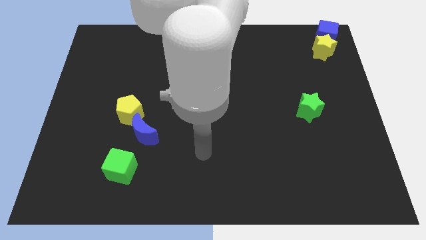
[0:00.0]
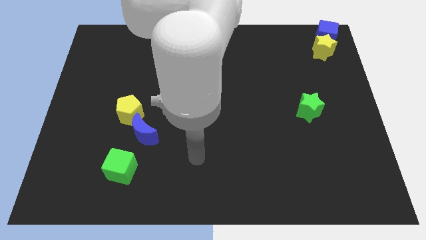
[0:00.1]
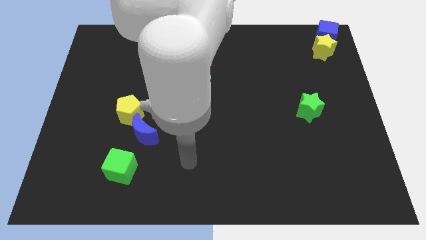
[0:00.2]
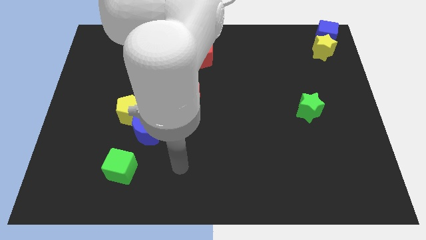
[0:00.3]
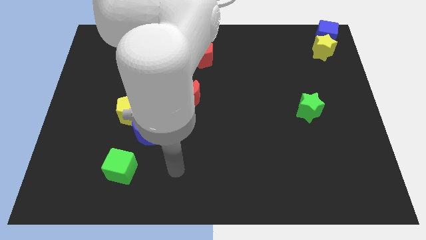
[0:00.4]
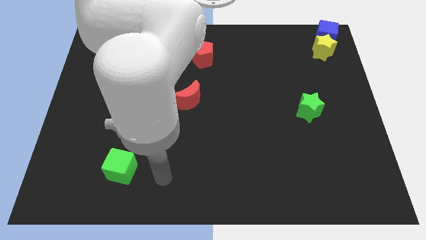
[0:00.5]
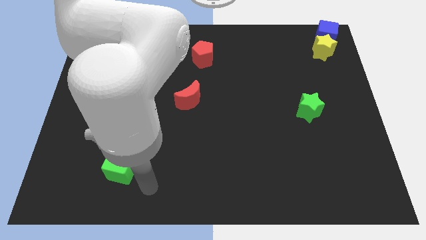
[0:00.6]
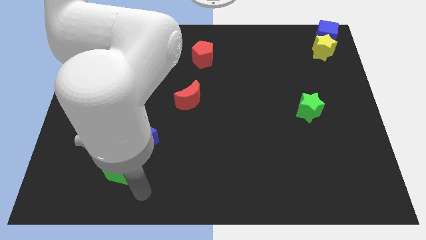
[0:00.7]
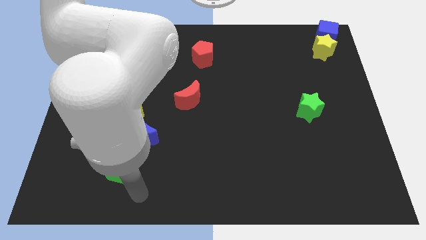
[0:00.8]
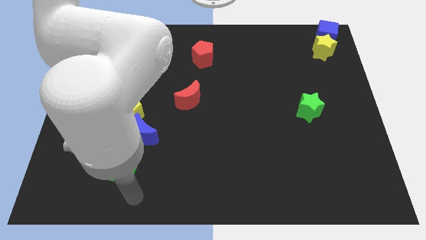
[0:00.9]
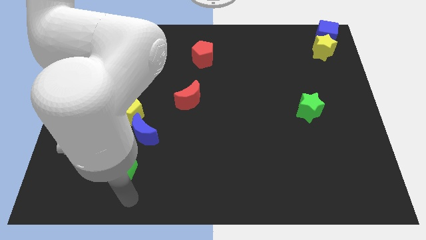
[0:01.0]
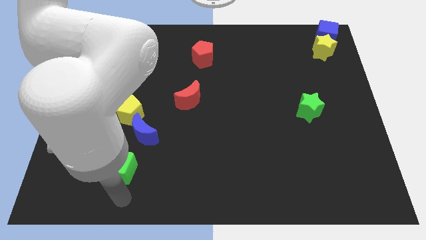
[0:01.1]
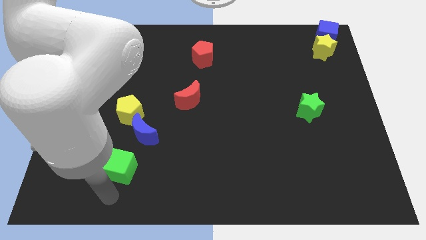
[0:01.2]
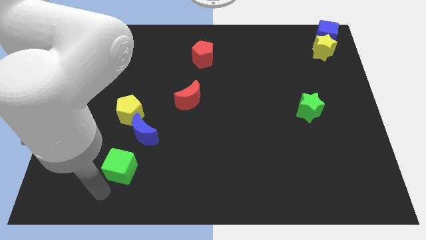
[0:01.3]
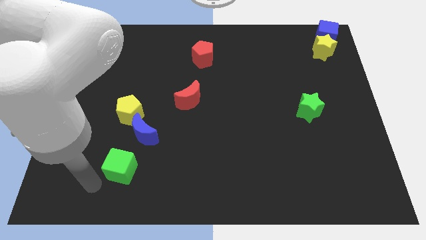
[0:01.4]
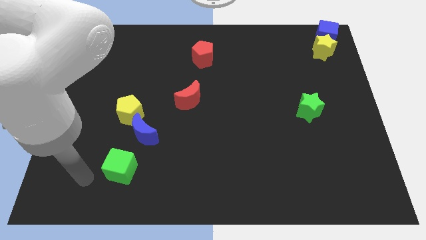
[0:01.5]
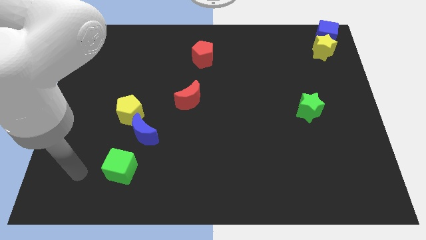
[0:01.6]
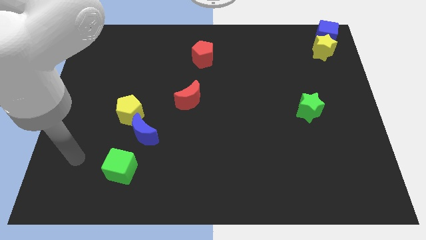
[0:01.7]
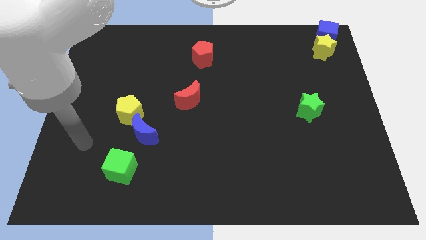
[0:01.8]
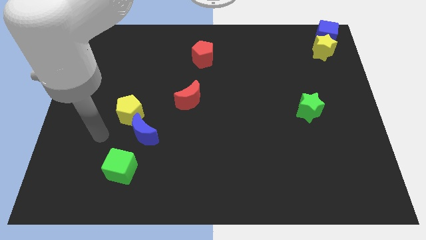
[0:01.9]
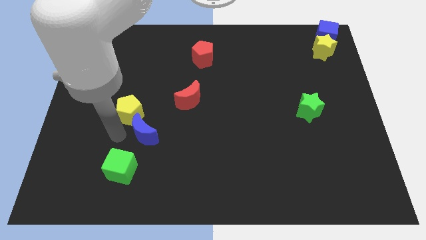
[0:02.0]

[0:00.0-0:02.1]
move your arm towards the left side of the blue crescent

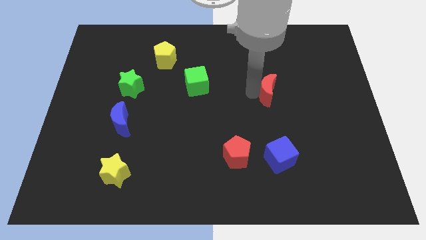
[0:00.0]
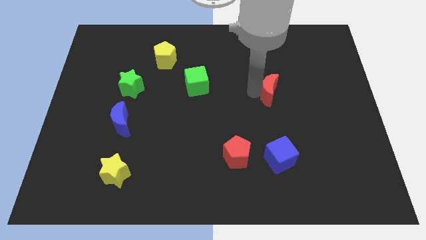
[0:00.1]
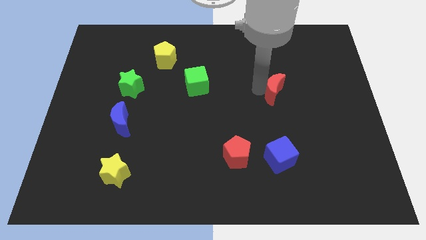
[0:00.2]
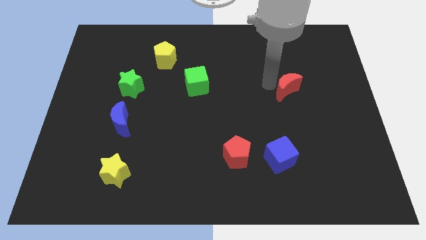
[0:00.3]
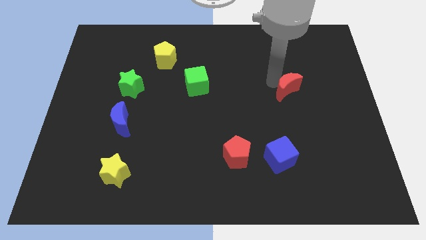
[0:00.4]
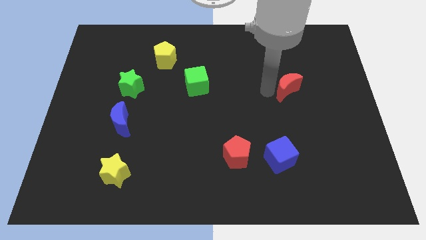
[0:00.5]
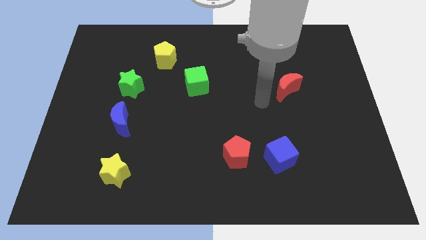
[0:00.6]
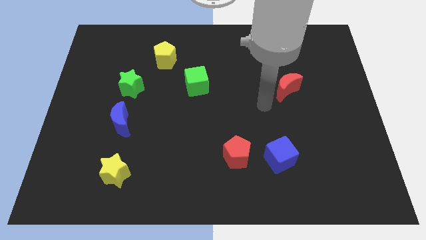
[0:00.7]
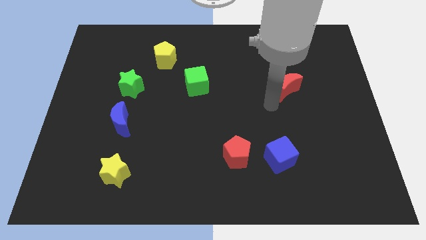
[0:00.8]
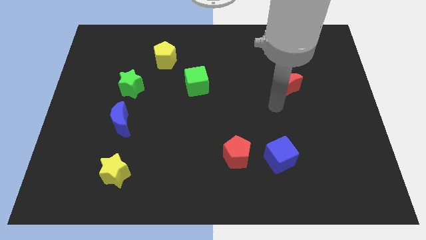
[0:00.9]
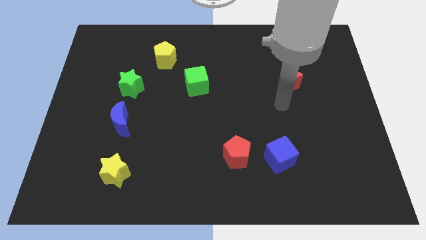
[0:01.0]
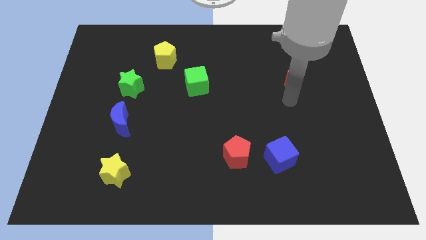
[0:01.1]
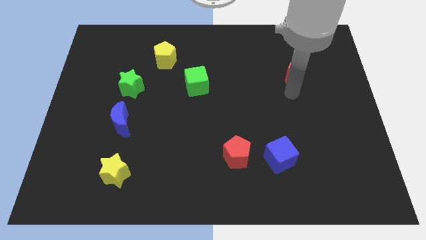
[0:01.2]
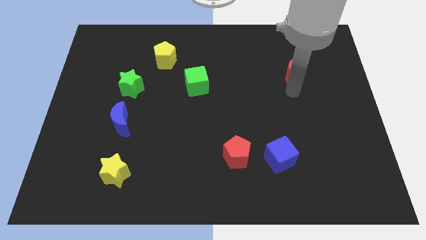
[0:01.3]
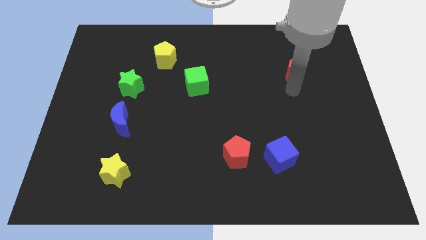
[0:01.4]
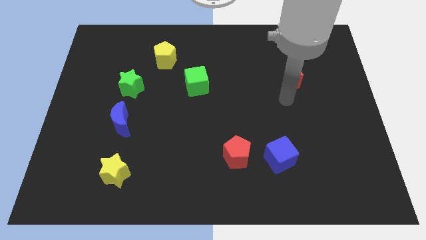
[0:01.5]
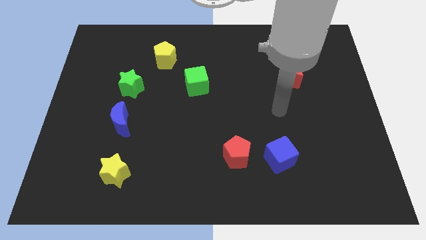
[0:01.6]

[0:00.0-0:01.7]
push red moon towards right side of the board

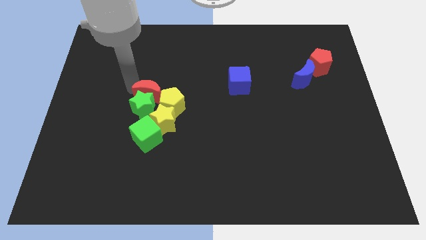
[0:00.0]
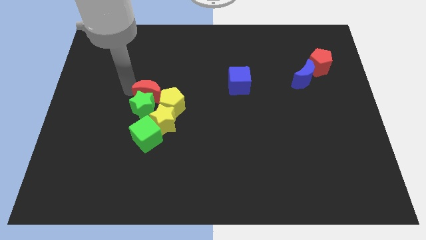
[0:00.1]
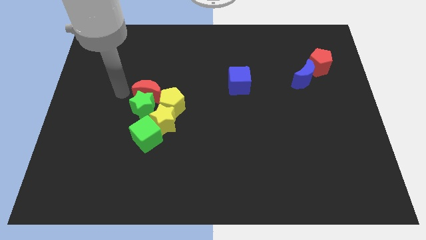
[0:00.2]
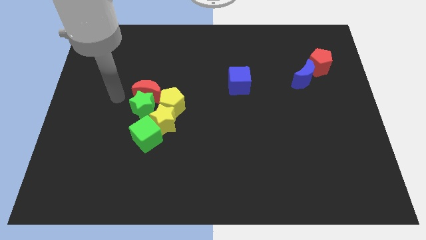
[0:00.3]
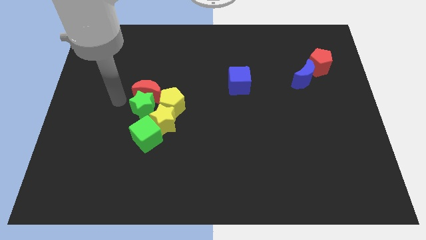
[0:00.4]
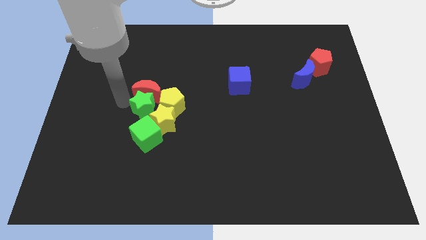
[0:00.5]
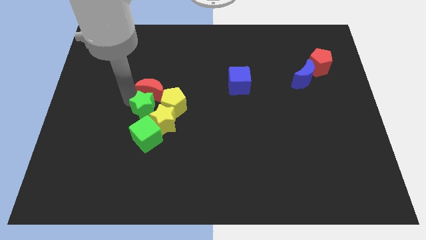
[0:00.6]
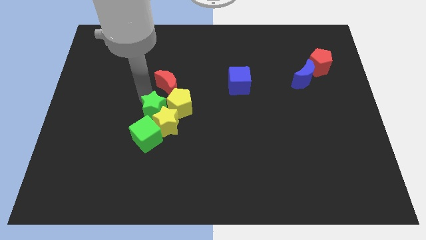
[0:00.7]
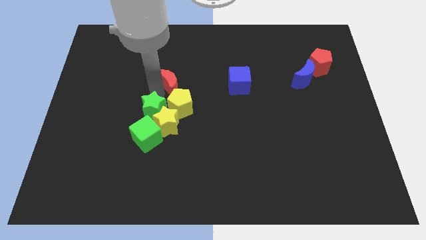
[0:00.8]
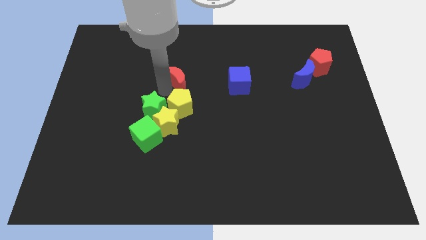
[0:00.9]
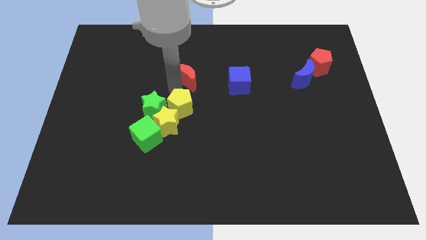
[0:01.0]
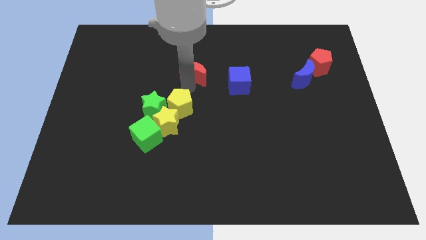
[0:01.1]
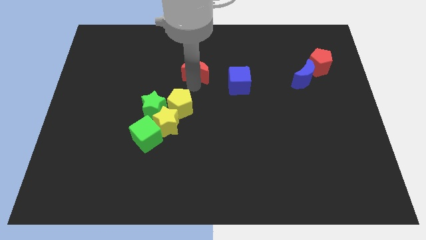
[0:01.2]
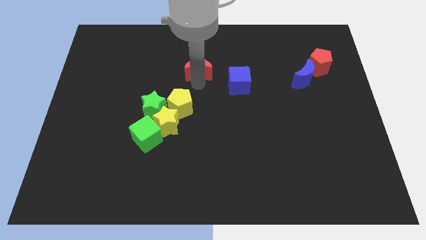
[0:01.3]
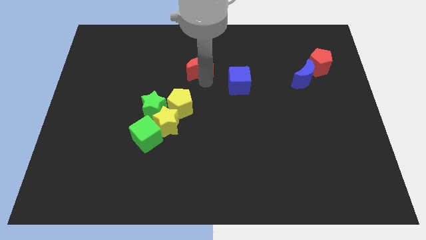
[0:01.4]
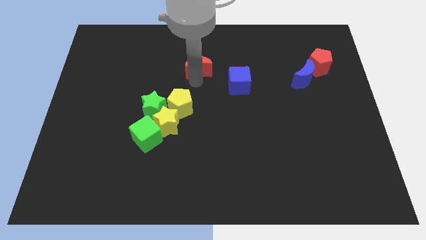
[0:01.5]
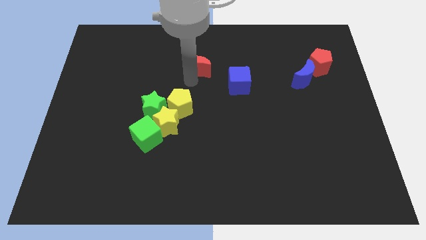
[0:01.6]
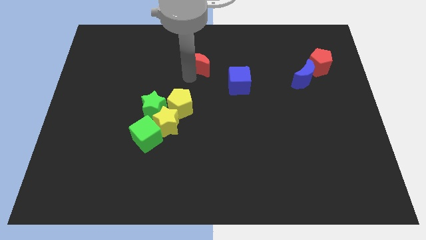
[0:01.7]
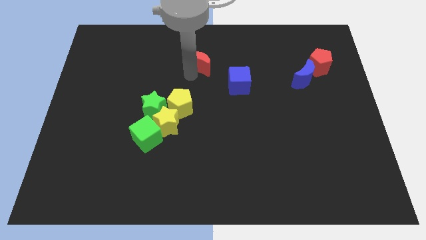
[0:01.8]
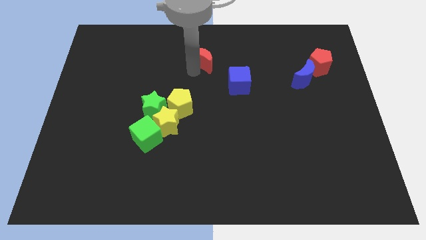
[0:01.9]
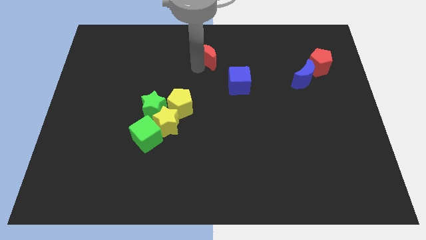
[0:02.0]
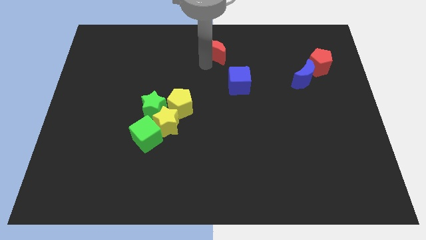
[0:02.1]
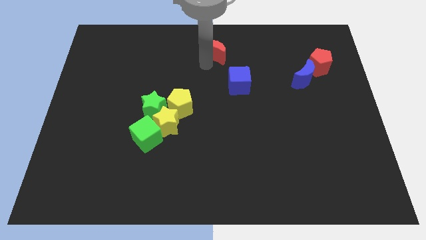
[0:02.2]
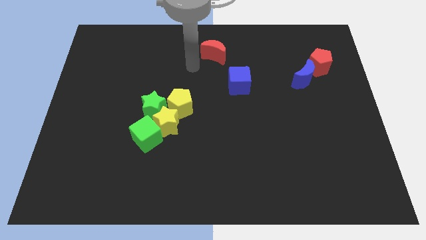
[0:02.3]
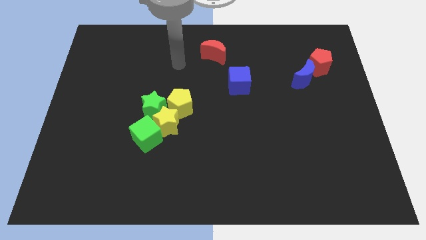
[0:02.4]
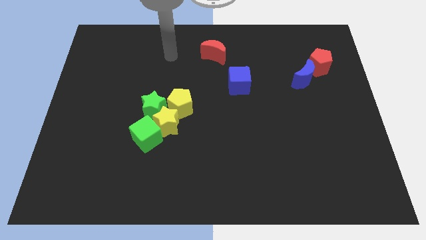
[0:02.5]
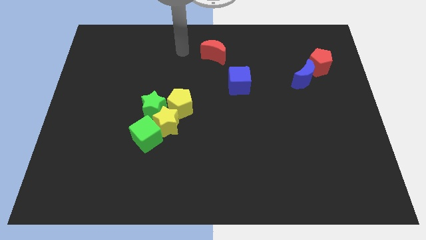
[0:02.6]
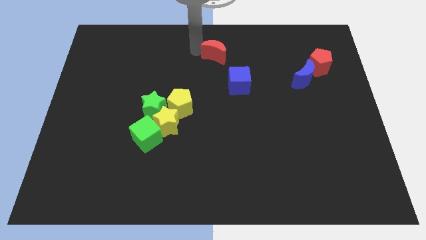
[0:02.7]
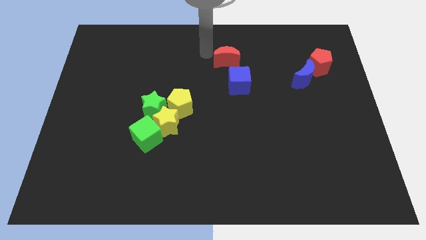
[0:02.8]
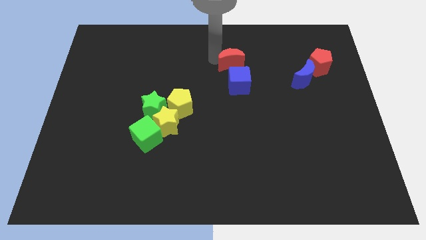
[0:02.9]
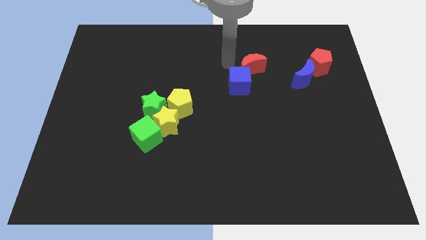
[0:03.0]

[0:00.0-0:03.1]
place red crescent into blue cube

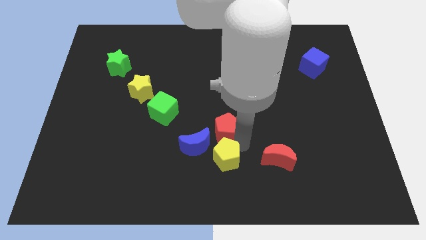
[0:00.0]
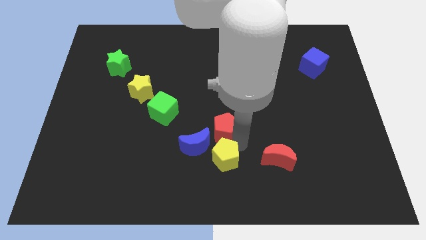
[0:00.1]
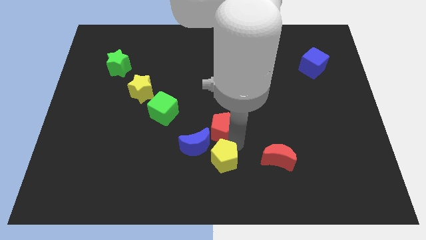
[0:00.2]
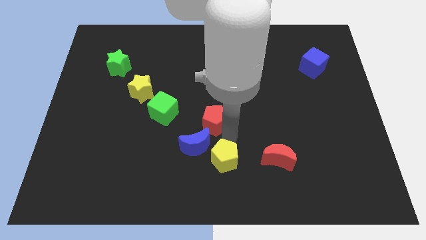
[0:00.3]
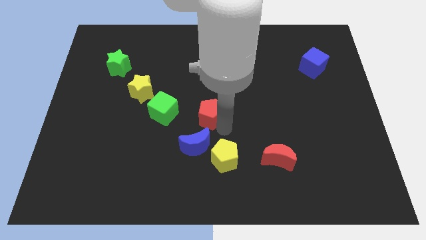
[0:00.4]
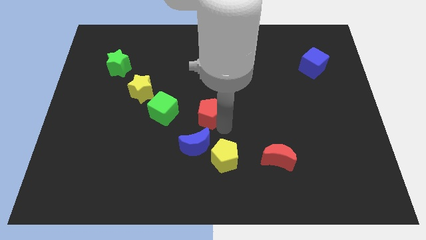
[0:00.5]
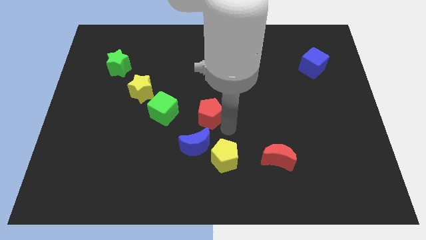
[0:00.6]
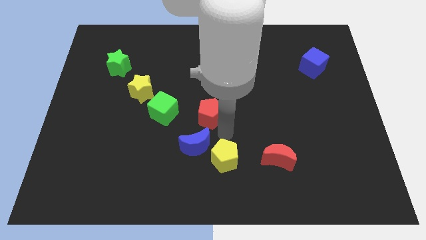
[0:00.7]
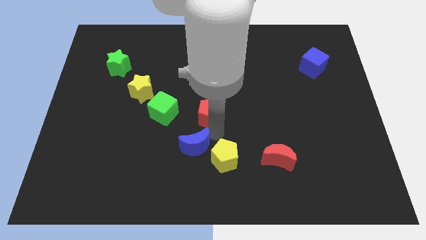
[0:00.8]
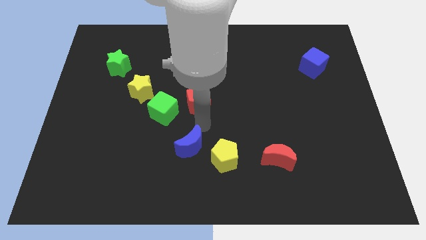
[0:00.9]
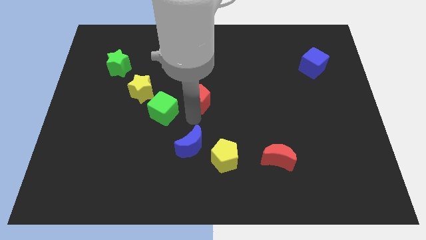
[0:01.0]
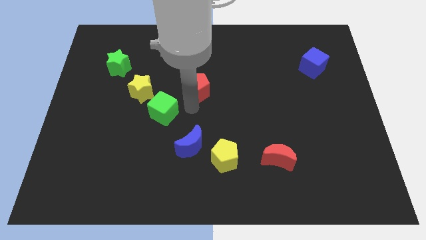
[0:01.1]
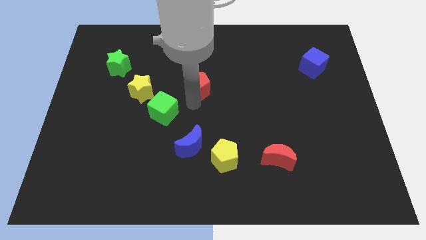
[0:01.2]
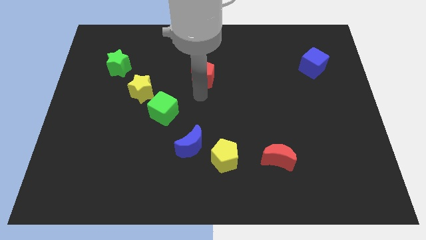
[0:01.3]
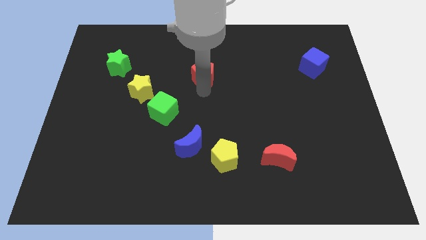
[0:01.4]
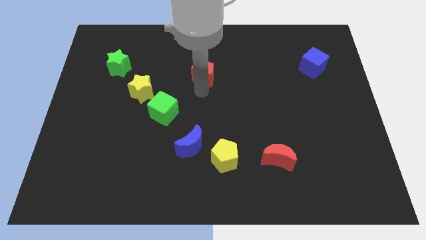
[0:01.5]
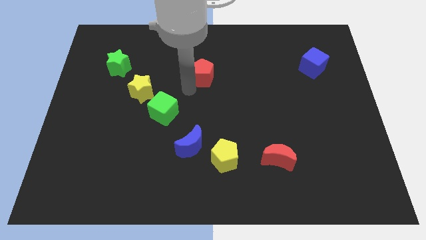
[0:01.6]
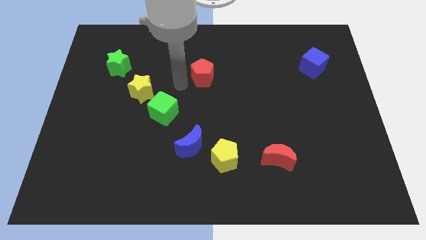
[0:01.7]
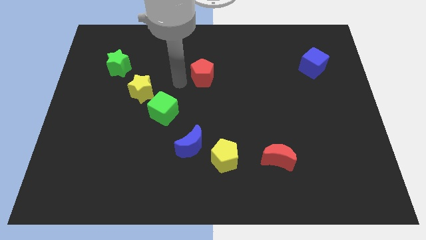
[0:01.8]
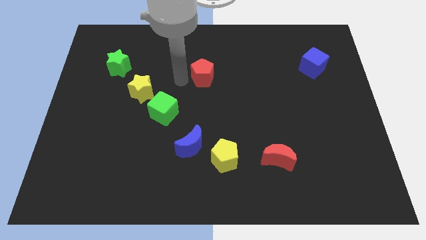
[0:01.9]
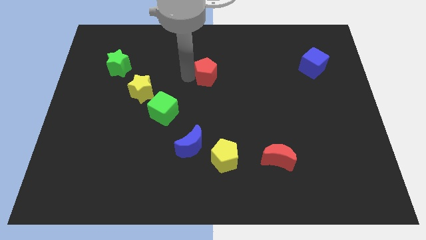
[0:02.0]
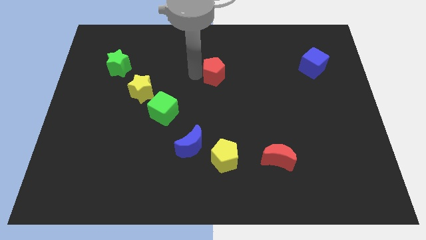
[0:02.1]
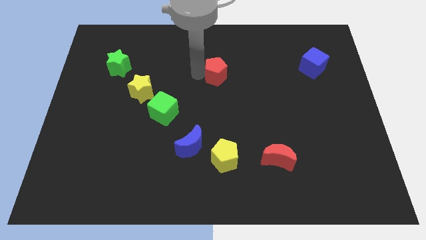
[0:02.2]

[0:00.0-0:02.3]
place the red pentagon top center of the board
